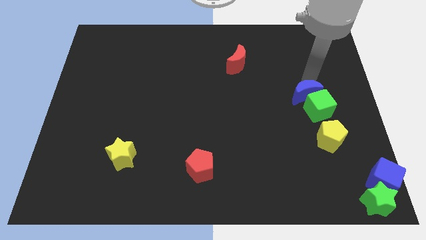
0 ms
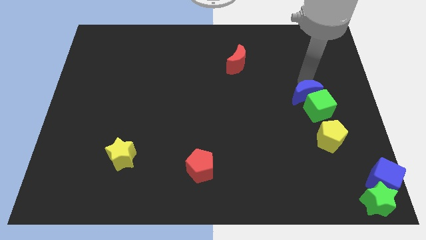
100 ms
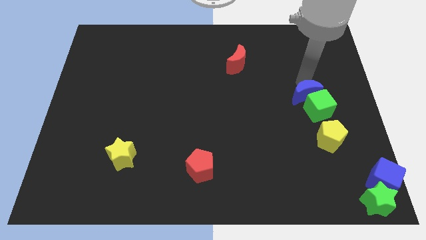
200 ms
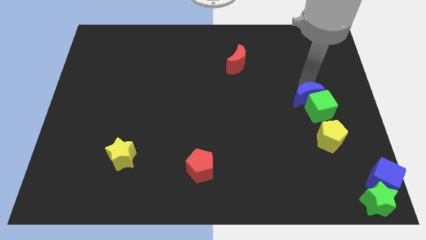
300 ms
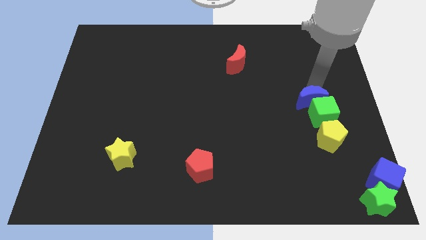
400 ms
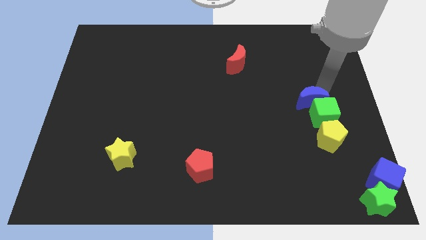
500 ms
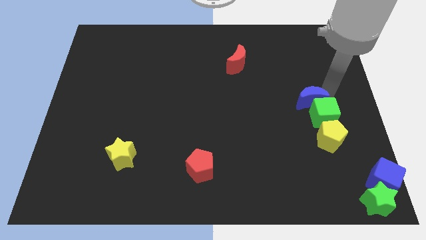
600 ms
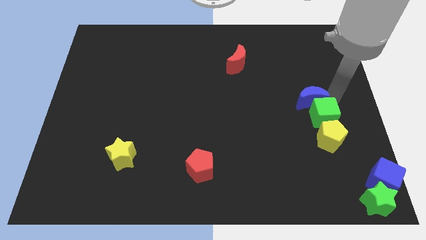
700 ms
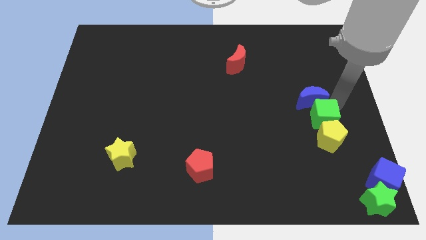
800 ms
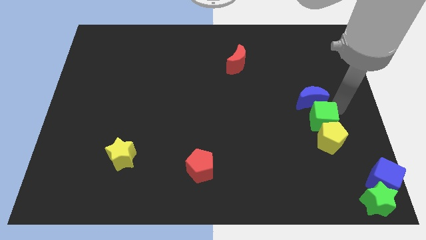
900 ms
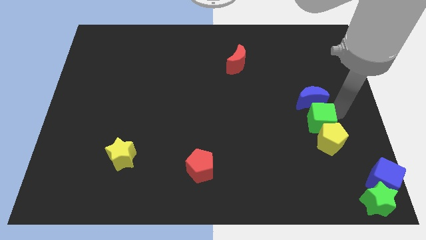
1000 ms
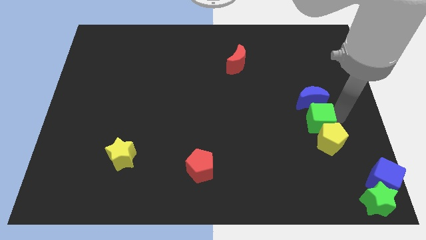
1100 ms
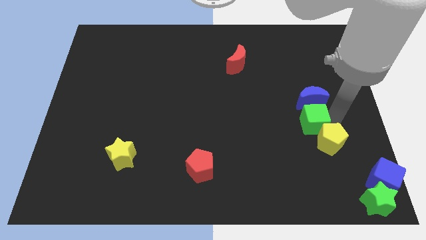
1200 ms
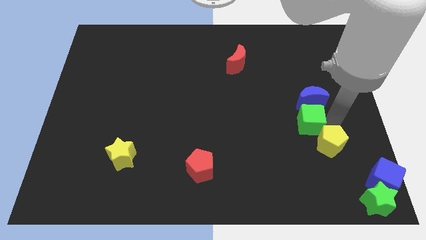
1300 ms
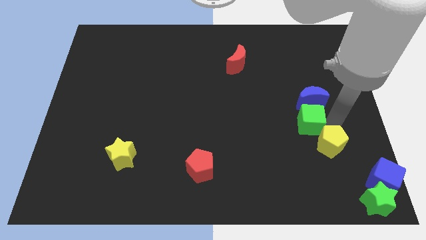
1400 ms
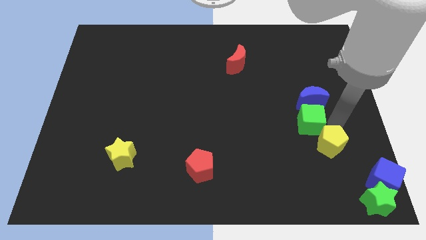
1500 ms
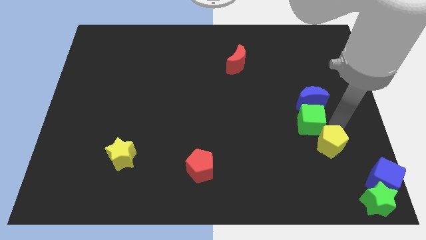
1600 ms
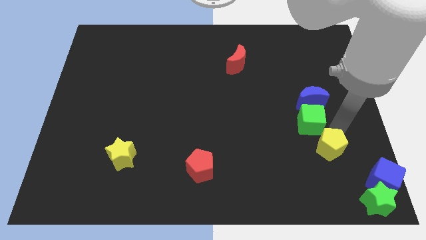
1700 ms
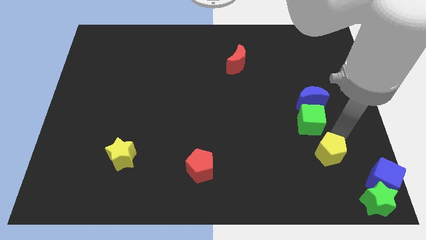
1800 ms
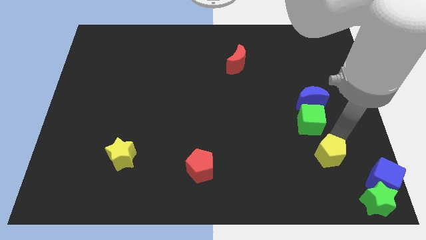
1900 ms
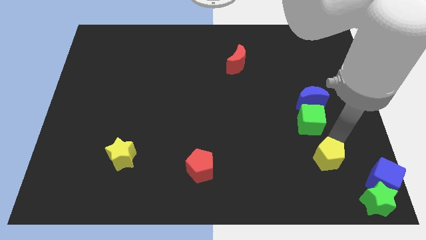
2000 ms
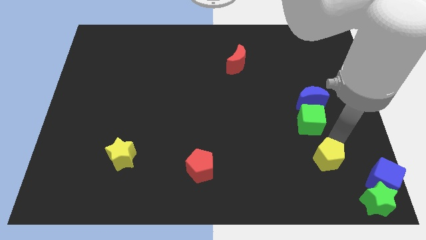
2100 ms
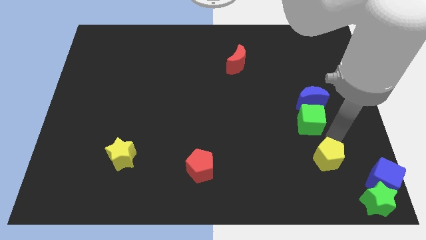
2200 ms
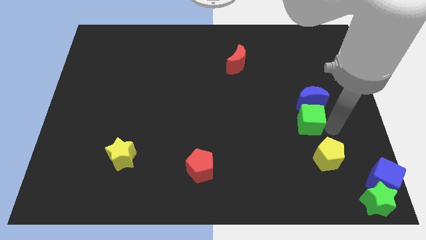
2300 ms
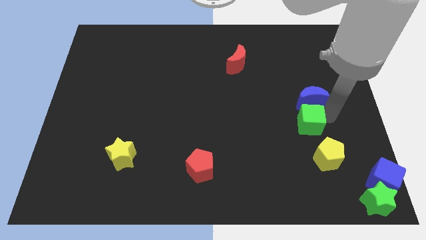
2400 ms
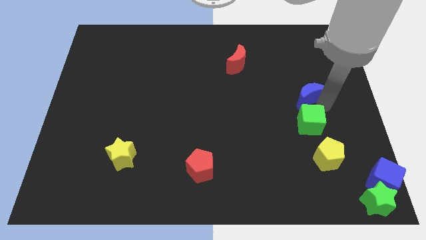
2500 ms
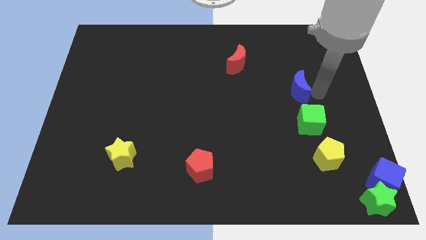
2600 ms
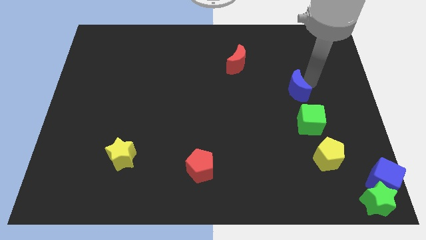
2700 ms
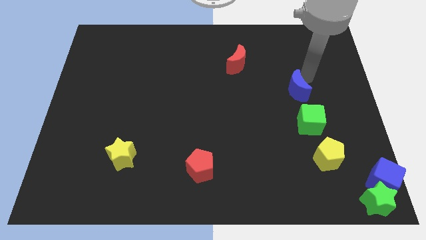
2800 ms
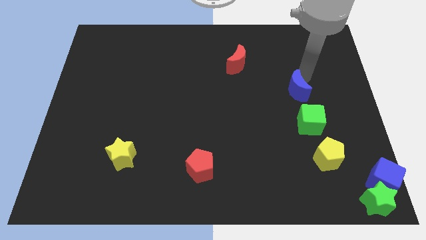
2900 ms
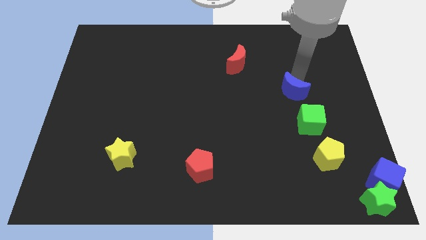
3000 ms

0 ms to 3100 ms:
adjust blue moon green cube and yellow pentagon in a vertical line

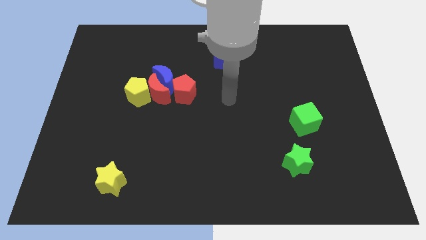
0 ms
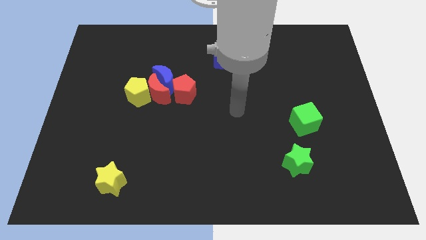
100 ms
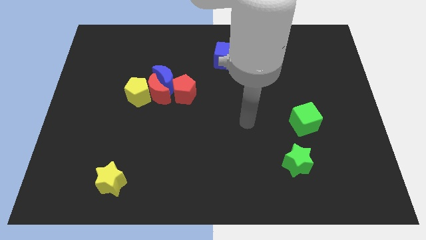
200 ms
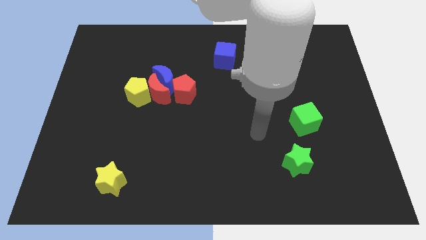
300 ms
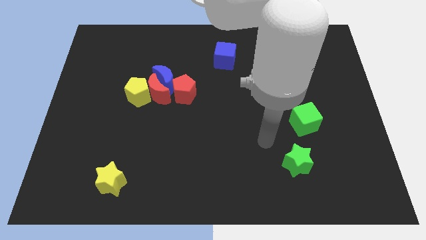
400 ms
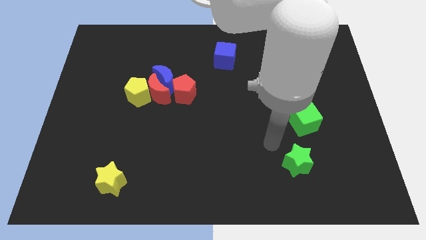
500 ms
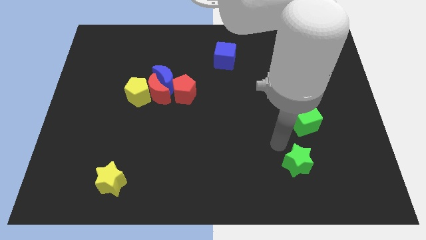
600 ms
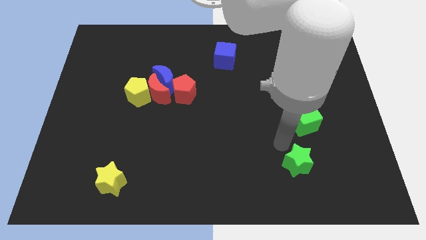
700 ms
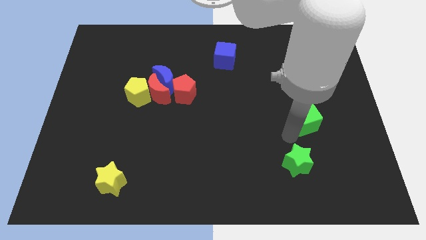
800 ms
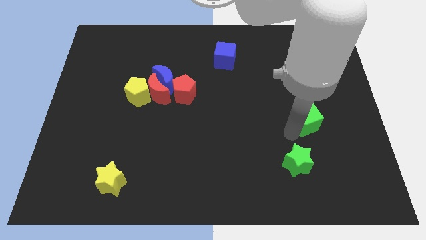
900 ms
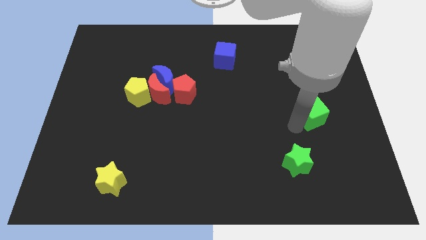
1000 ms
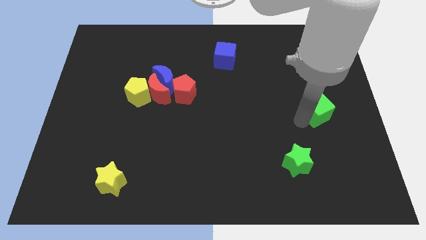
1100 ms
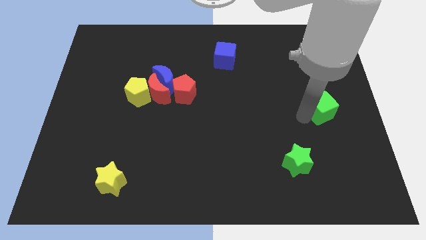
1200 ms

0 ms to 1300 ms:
move your arm towards the green cube

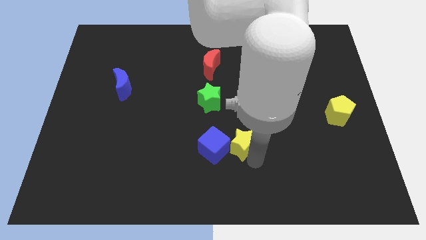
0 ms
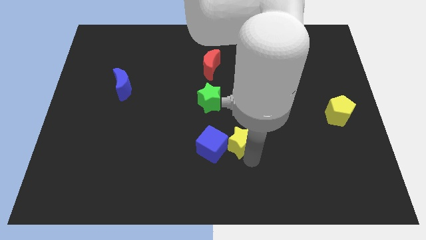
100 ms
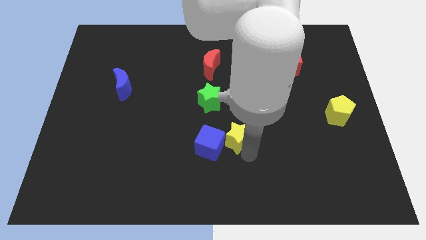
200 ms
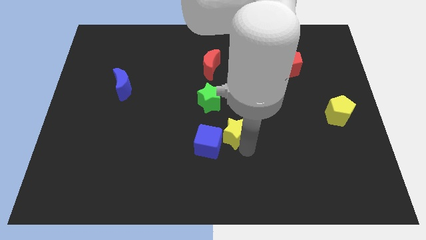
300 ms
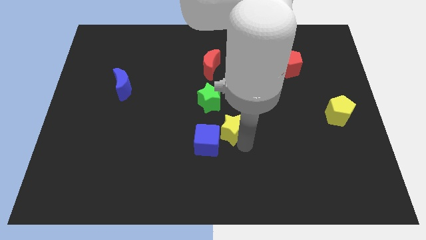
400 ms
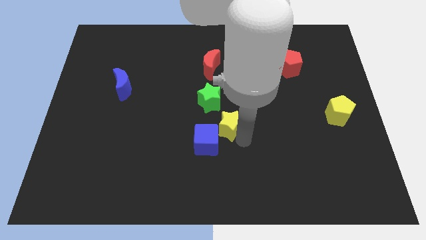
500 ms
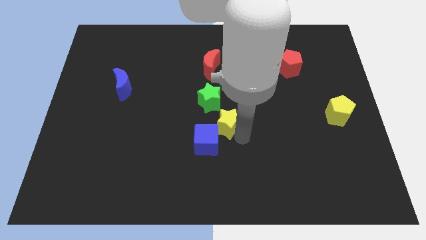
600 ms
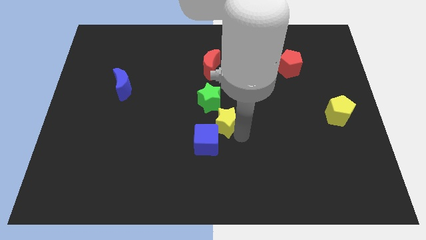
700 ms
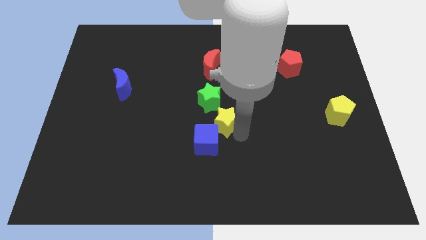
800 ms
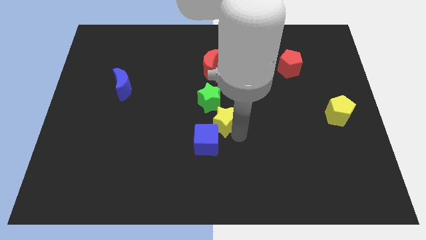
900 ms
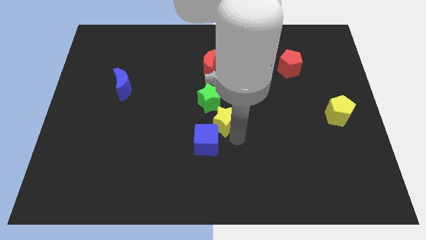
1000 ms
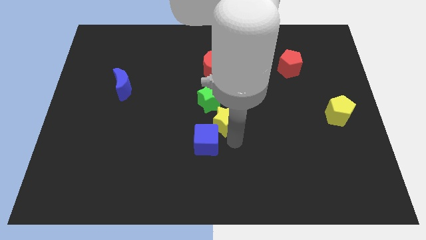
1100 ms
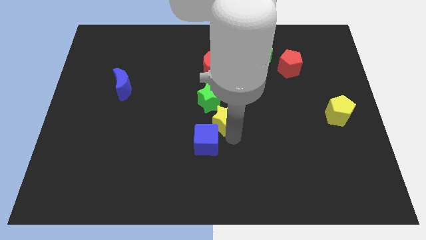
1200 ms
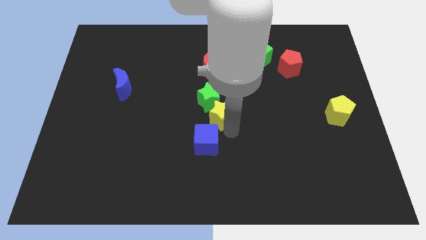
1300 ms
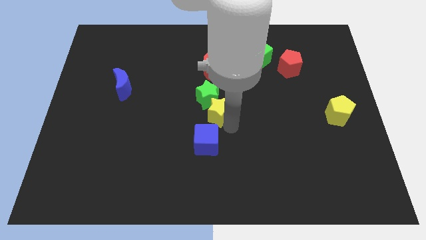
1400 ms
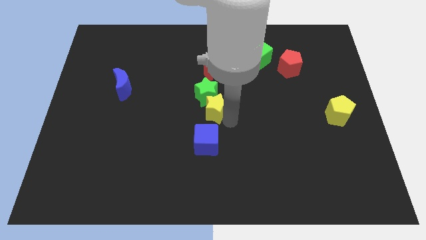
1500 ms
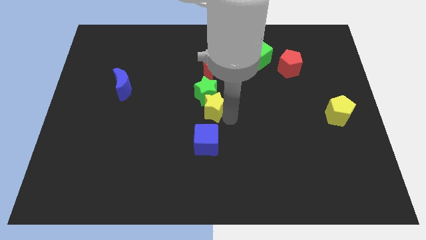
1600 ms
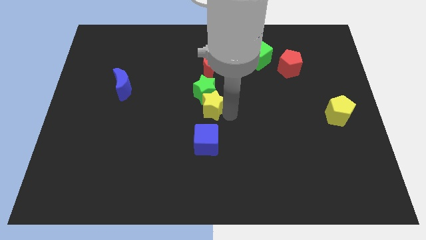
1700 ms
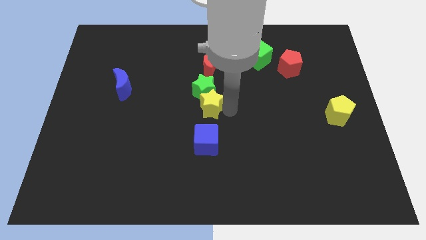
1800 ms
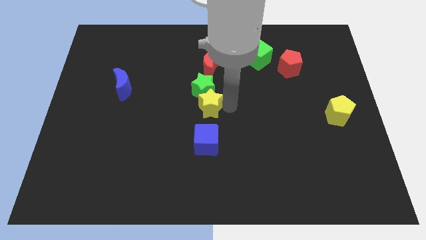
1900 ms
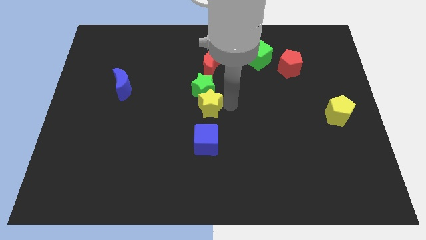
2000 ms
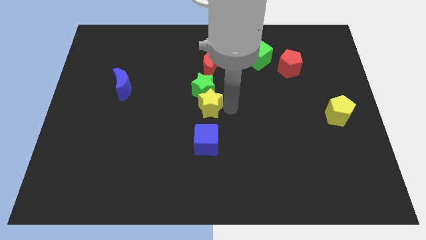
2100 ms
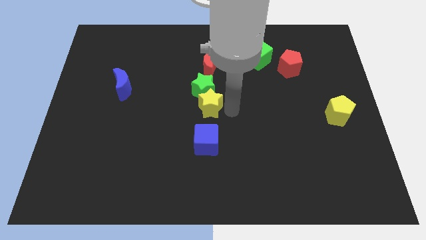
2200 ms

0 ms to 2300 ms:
push the yellow star into the green star

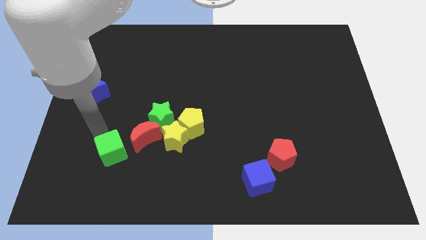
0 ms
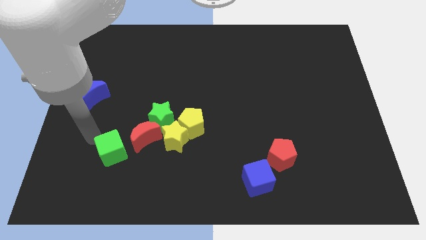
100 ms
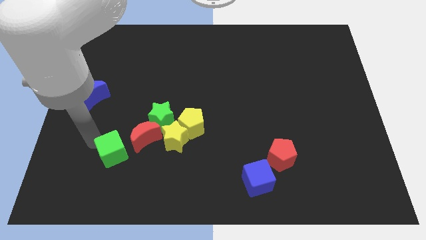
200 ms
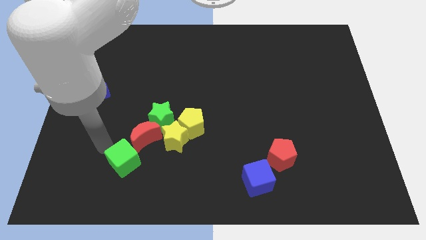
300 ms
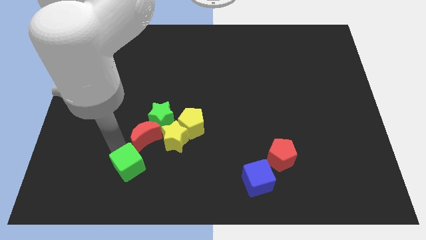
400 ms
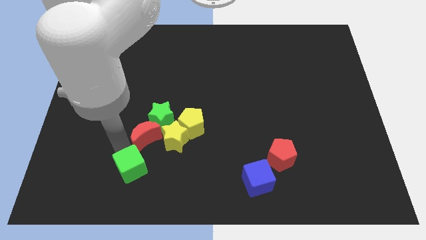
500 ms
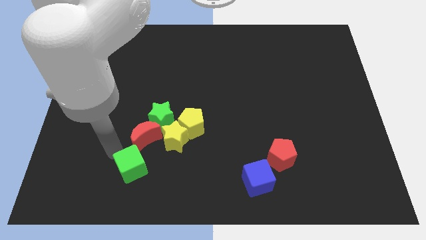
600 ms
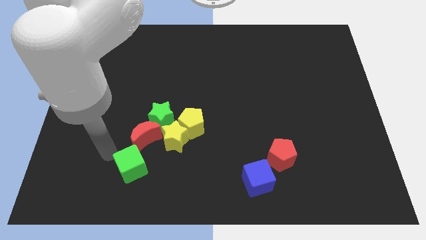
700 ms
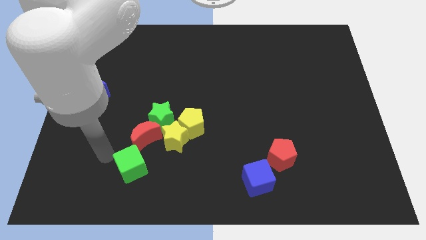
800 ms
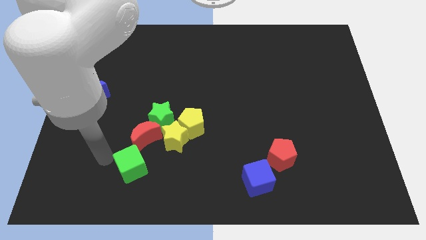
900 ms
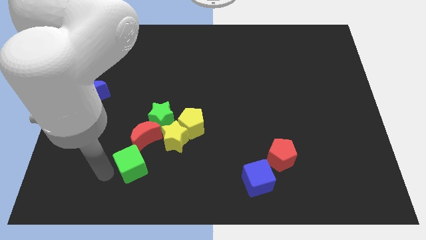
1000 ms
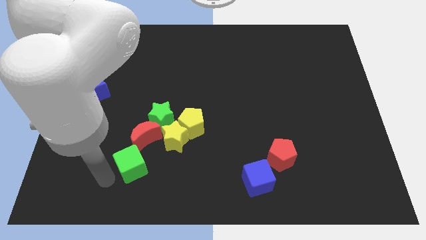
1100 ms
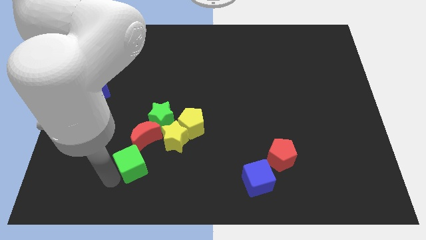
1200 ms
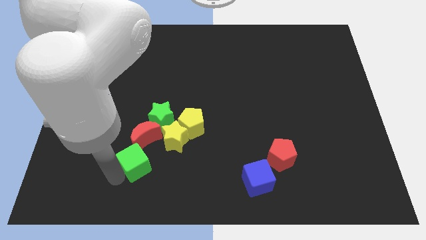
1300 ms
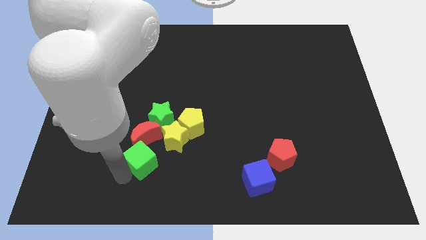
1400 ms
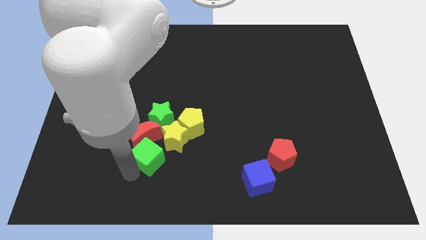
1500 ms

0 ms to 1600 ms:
move the green cube below the red moon

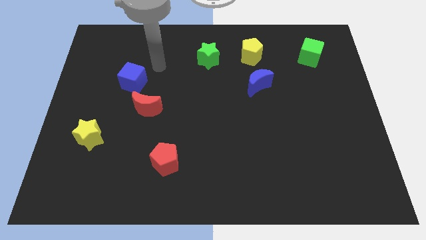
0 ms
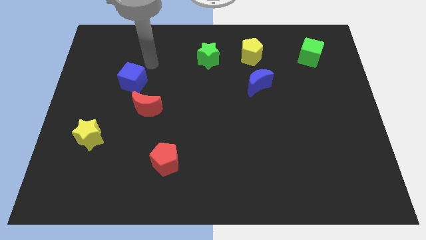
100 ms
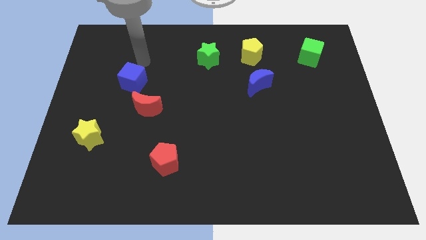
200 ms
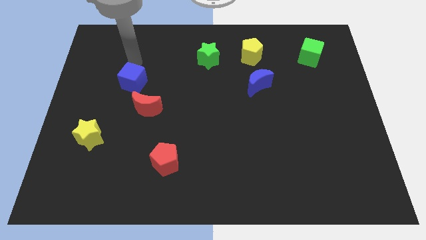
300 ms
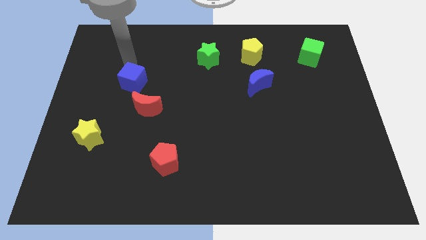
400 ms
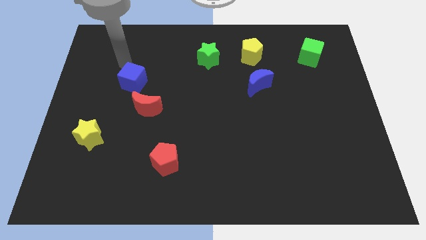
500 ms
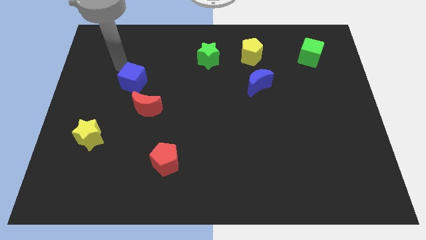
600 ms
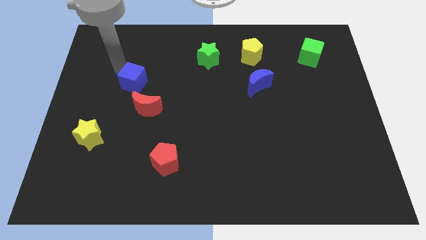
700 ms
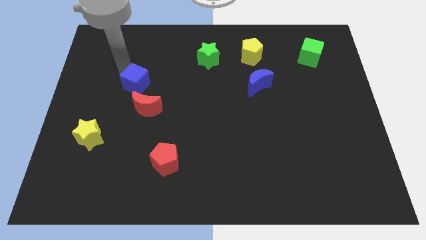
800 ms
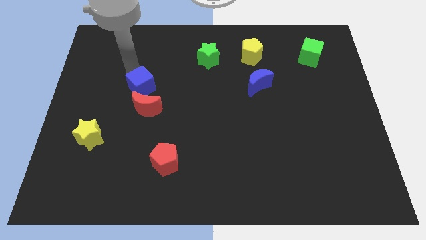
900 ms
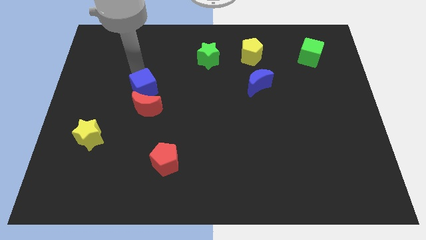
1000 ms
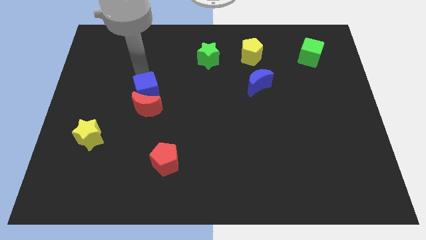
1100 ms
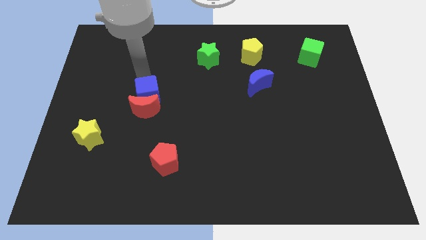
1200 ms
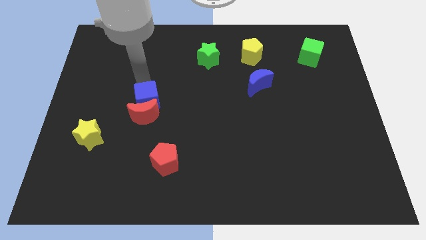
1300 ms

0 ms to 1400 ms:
put the blue cube at the top of the red crescent
